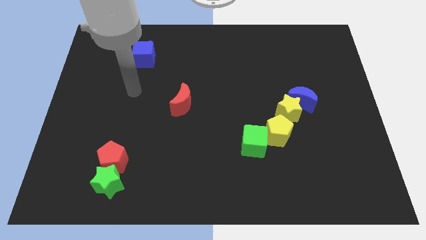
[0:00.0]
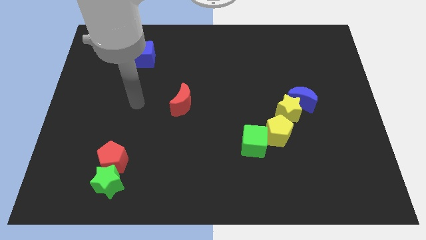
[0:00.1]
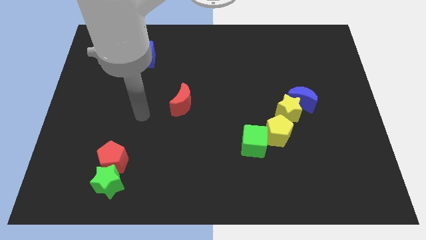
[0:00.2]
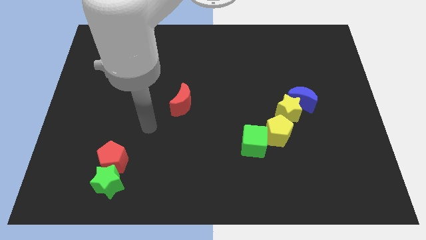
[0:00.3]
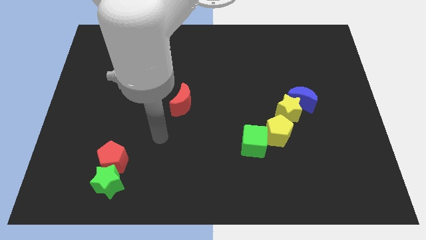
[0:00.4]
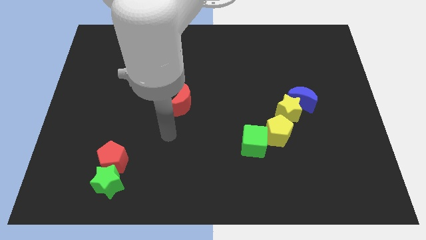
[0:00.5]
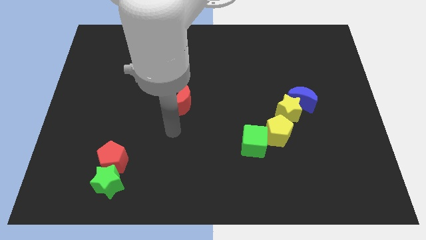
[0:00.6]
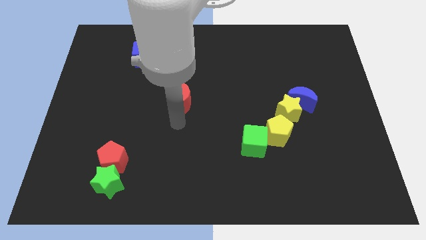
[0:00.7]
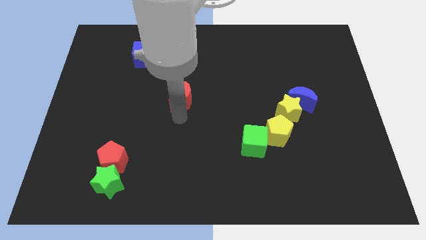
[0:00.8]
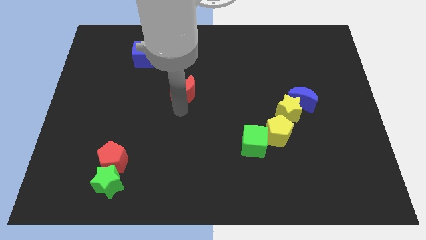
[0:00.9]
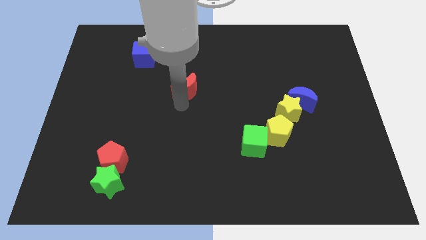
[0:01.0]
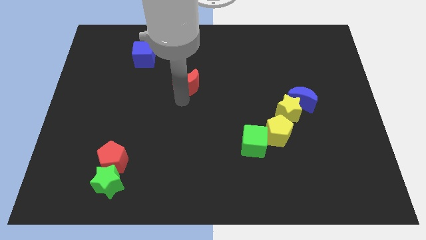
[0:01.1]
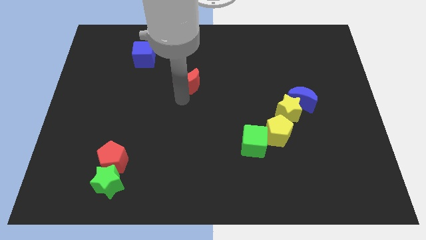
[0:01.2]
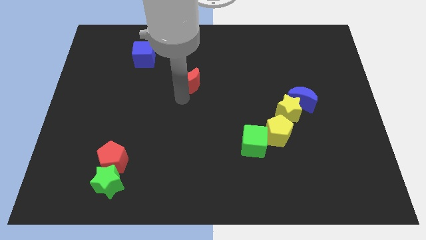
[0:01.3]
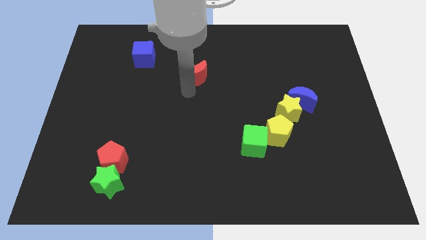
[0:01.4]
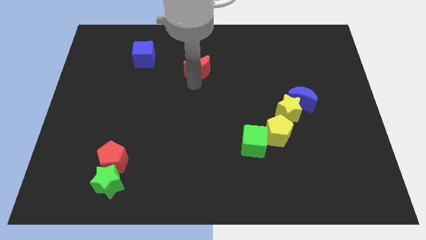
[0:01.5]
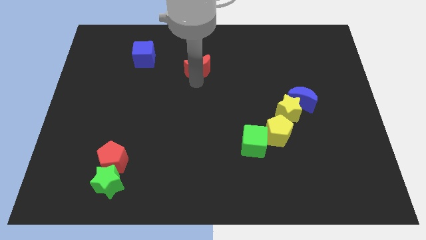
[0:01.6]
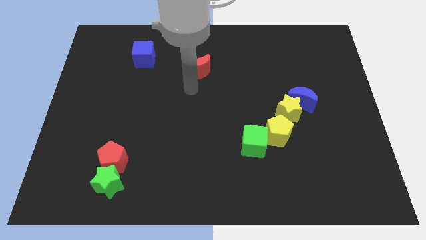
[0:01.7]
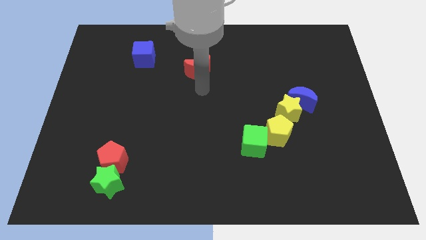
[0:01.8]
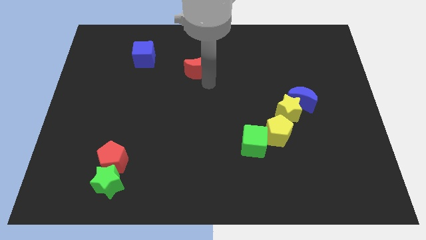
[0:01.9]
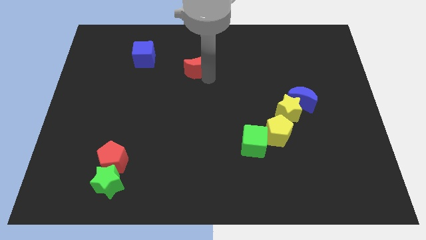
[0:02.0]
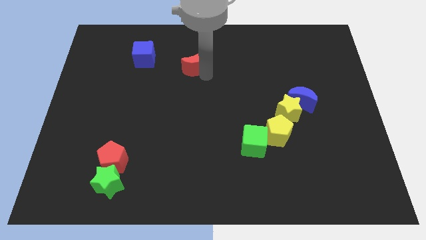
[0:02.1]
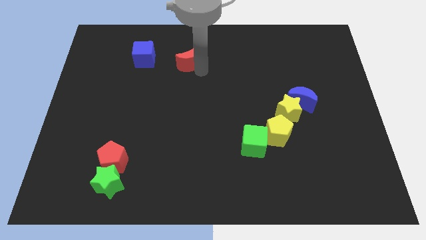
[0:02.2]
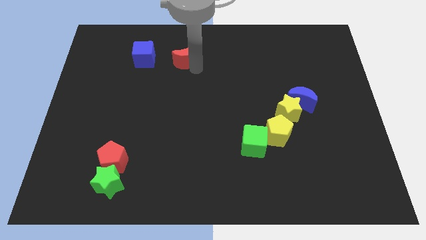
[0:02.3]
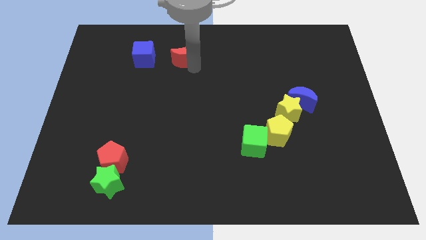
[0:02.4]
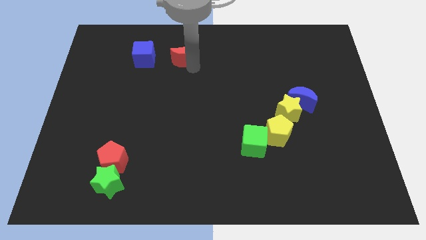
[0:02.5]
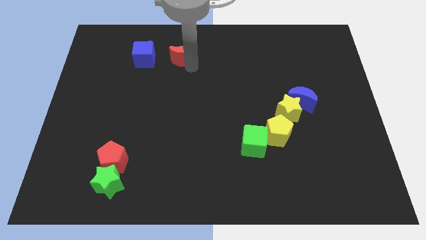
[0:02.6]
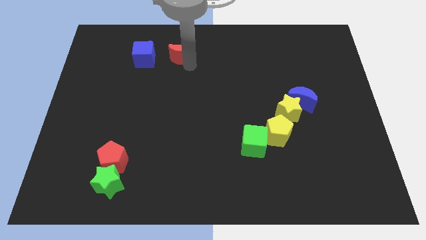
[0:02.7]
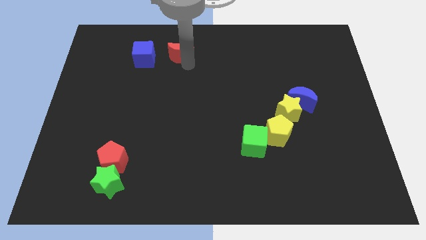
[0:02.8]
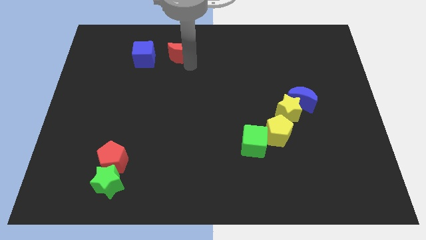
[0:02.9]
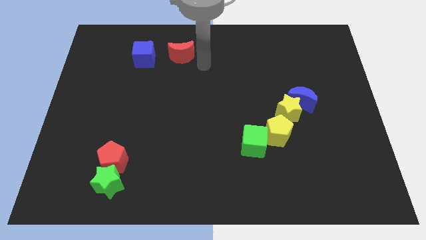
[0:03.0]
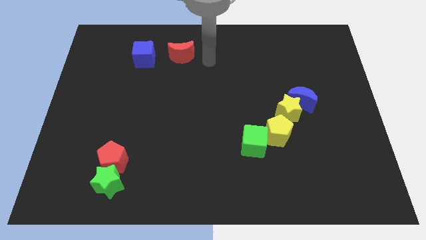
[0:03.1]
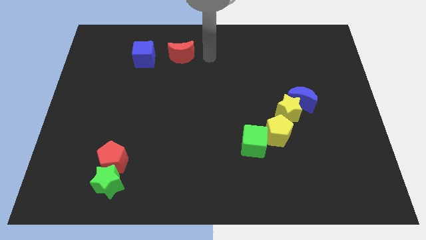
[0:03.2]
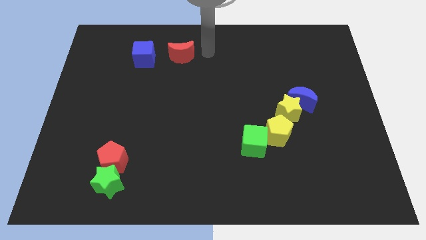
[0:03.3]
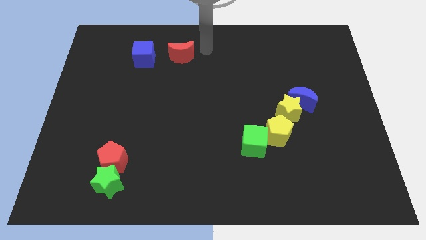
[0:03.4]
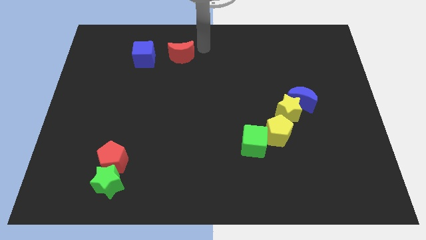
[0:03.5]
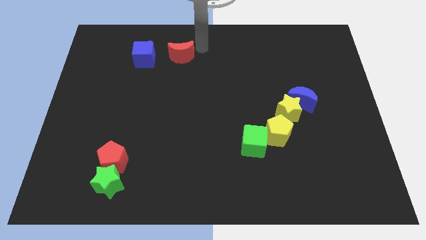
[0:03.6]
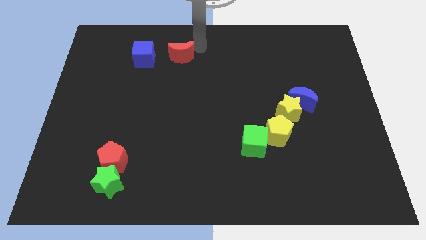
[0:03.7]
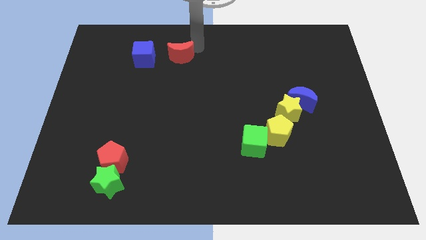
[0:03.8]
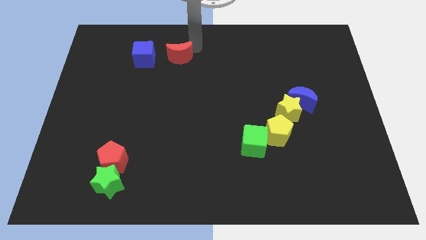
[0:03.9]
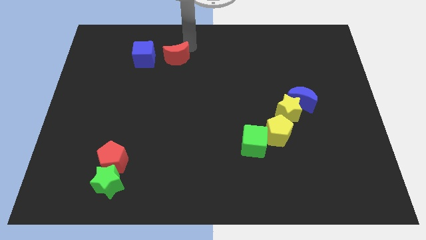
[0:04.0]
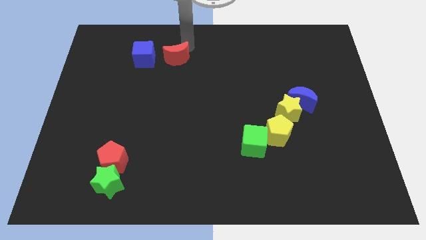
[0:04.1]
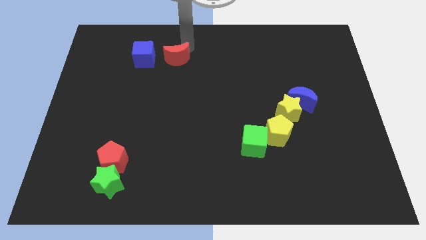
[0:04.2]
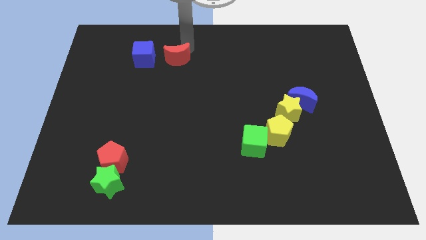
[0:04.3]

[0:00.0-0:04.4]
push the red crescent to the right of the blue cube

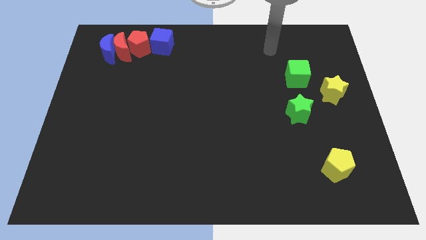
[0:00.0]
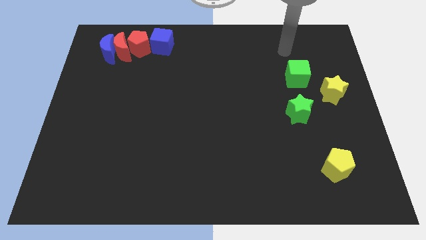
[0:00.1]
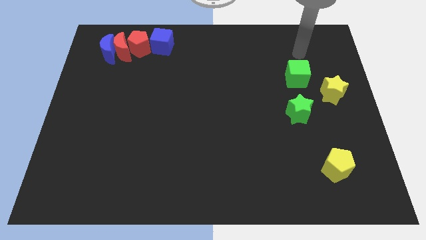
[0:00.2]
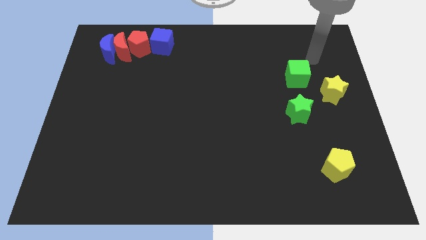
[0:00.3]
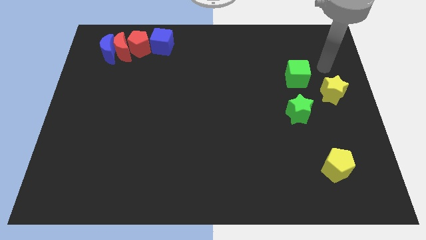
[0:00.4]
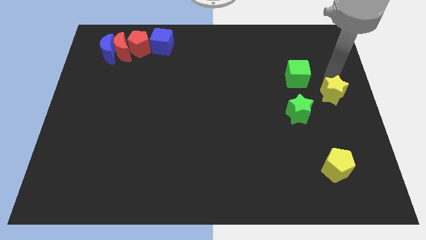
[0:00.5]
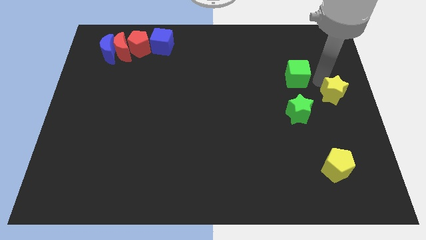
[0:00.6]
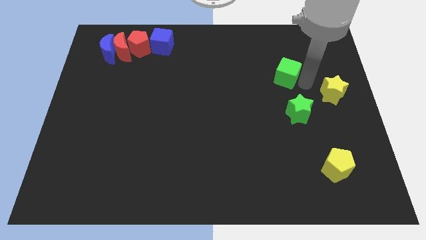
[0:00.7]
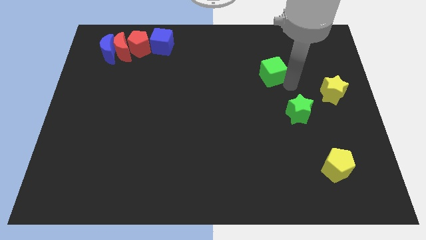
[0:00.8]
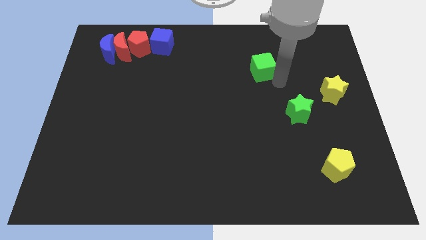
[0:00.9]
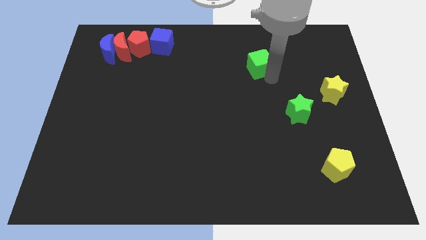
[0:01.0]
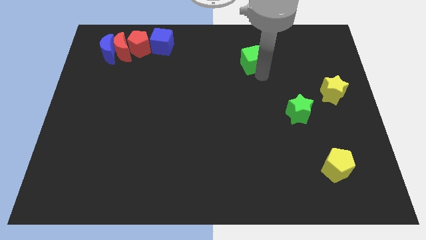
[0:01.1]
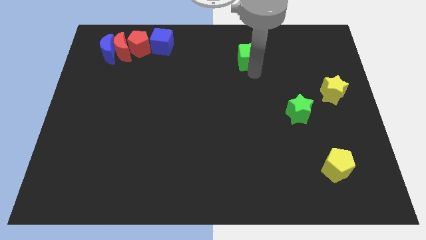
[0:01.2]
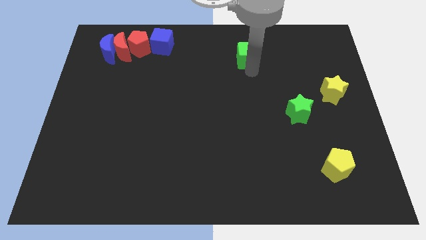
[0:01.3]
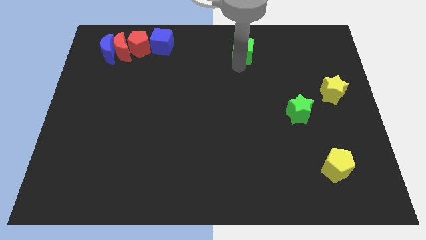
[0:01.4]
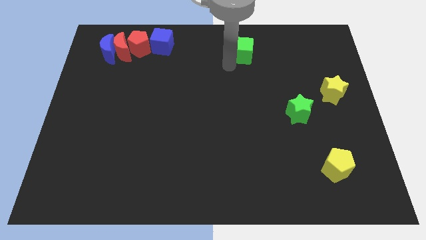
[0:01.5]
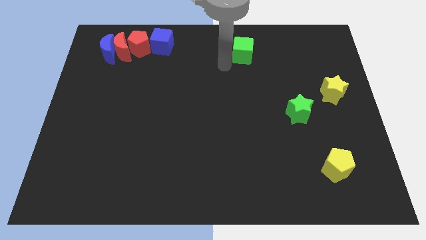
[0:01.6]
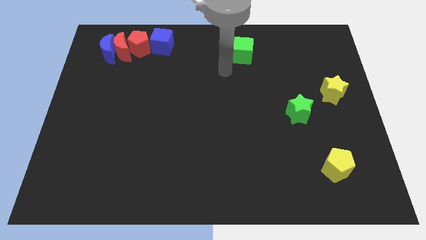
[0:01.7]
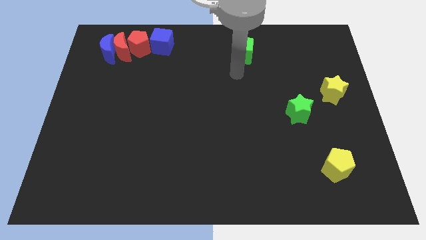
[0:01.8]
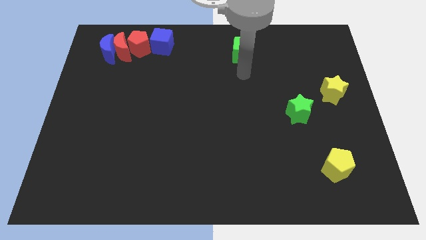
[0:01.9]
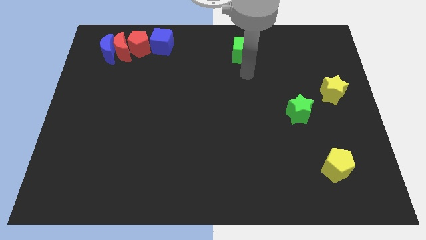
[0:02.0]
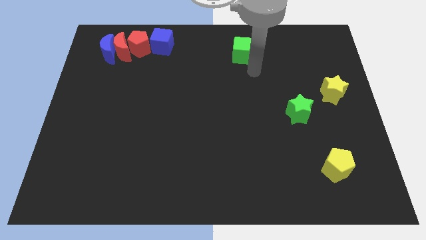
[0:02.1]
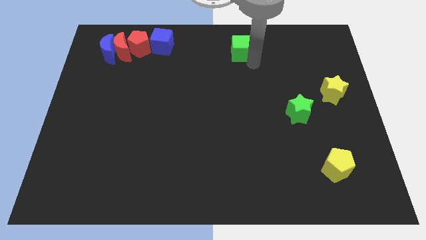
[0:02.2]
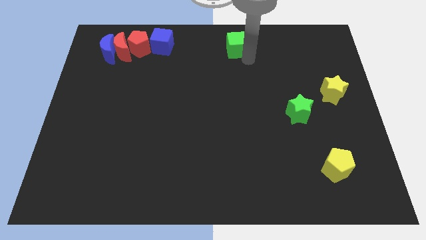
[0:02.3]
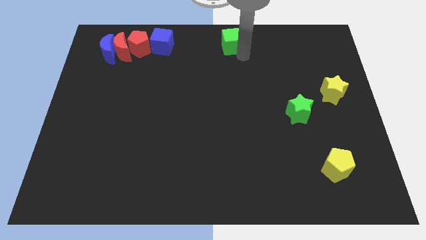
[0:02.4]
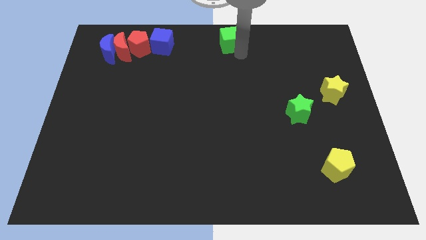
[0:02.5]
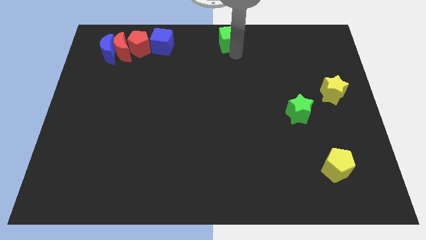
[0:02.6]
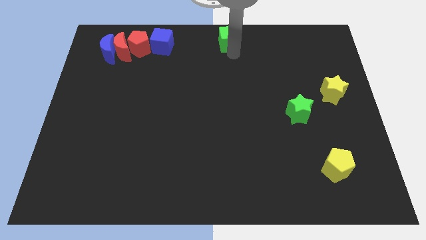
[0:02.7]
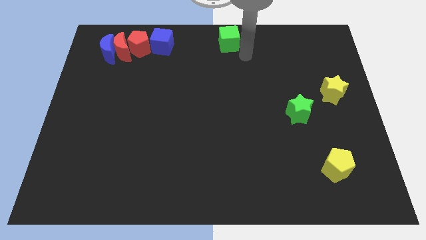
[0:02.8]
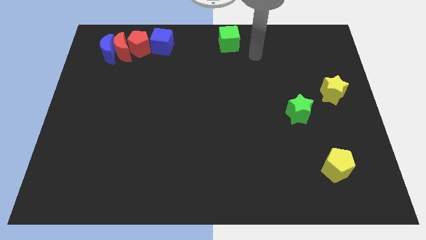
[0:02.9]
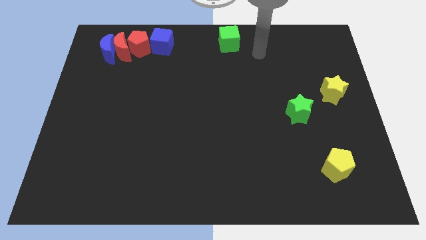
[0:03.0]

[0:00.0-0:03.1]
place green cube at the top center

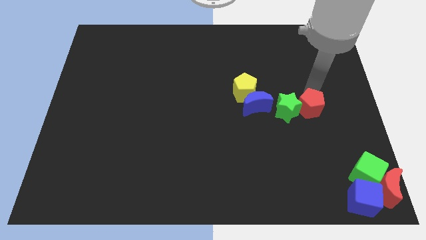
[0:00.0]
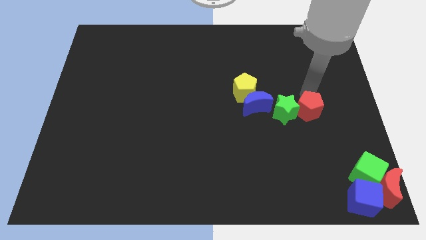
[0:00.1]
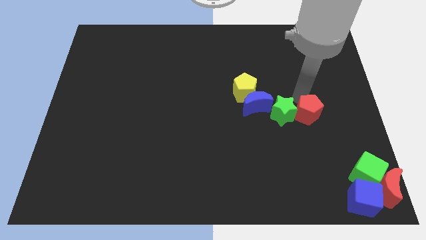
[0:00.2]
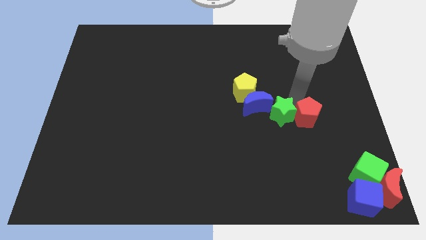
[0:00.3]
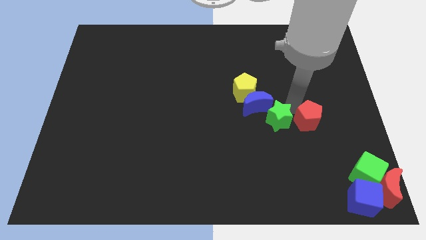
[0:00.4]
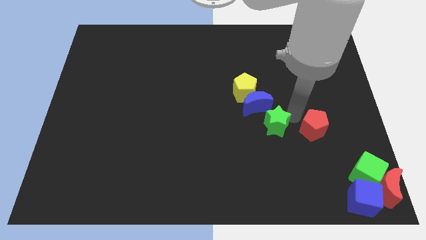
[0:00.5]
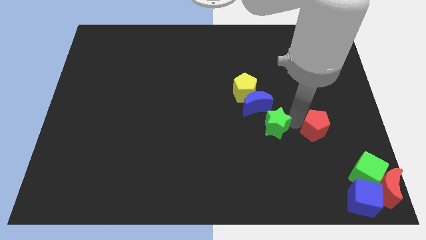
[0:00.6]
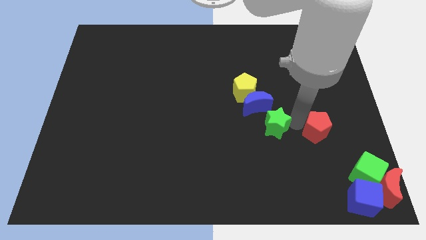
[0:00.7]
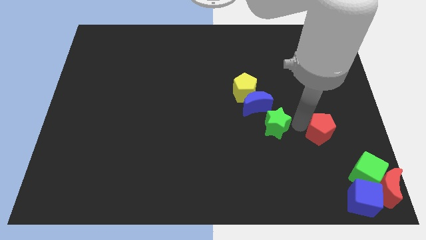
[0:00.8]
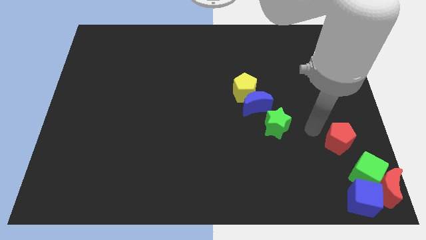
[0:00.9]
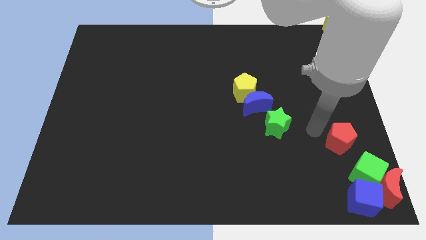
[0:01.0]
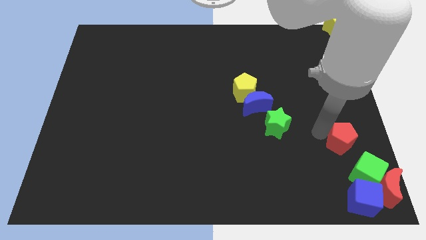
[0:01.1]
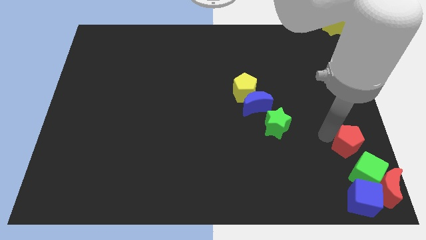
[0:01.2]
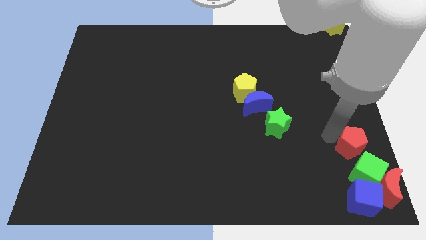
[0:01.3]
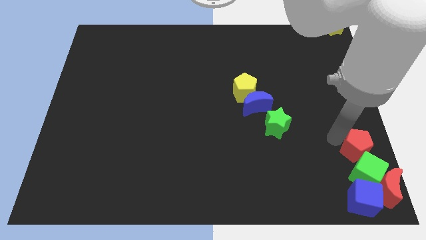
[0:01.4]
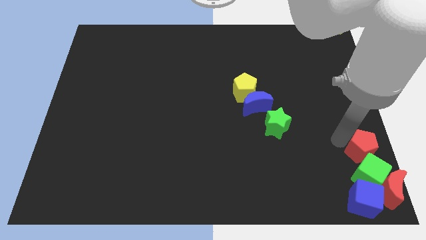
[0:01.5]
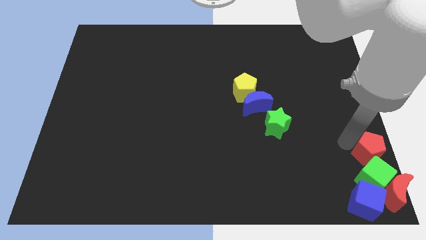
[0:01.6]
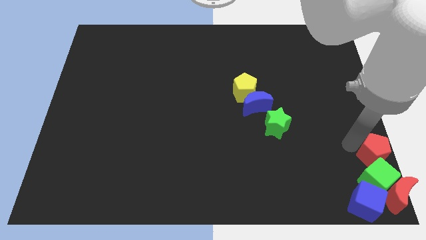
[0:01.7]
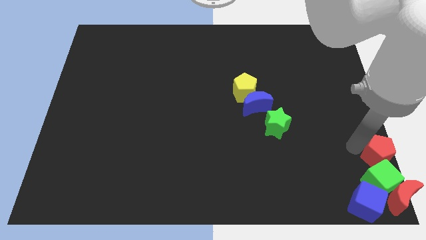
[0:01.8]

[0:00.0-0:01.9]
push red pentagon into green cube
